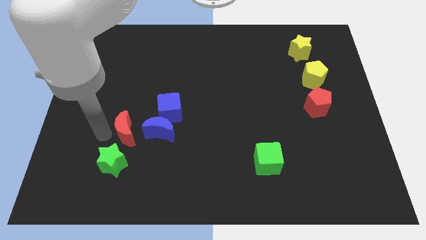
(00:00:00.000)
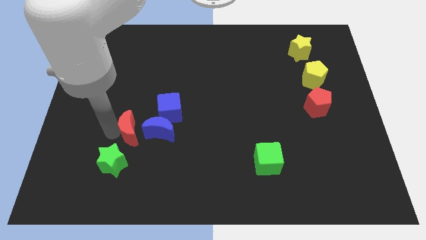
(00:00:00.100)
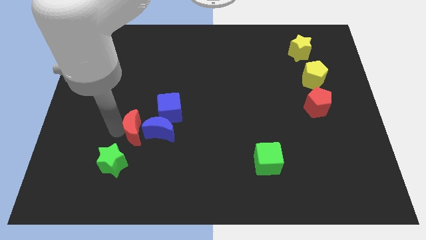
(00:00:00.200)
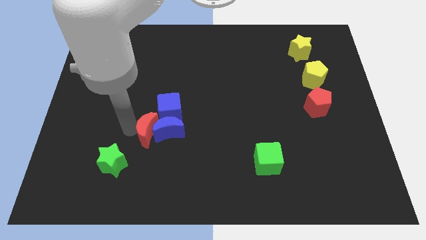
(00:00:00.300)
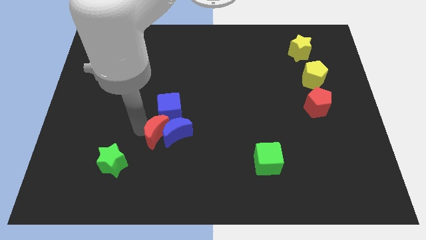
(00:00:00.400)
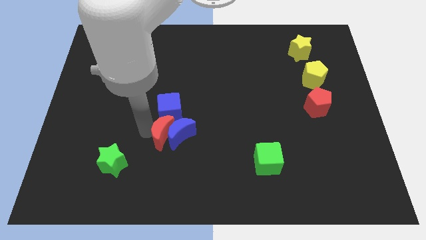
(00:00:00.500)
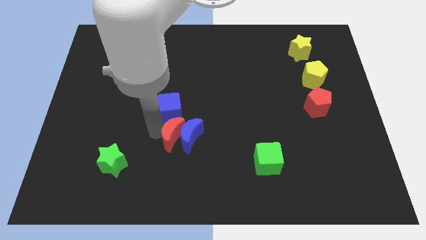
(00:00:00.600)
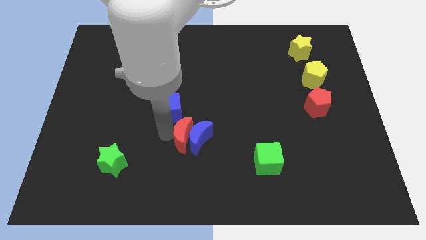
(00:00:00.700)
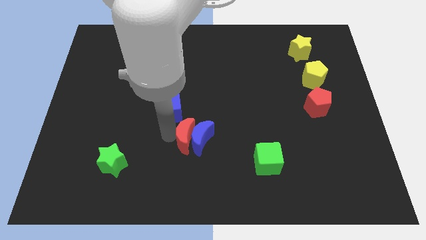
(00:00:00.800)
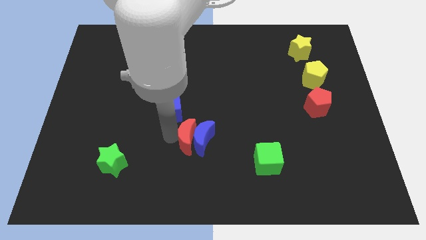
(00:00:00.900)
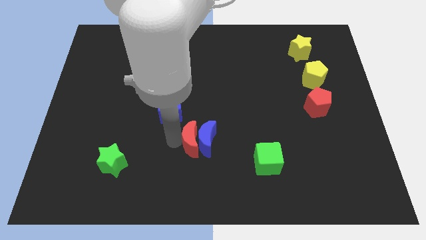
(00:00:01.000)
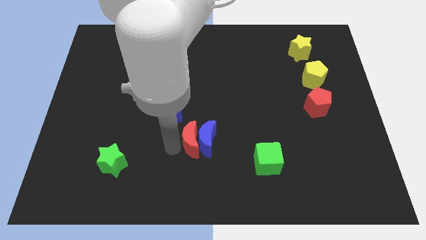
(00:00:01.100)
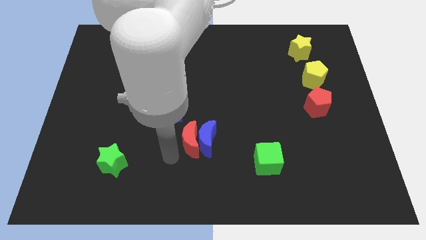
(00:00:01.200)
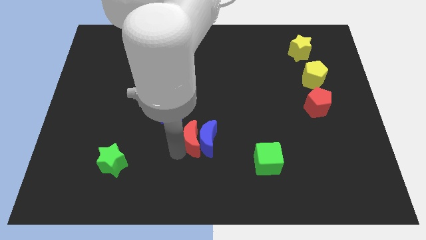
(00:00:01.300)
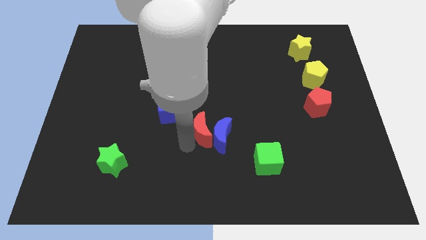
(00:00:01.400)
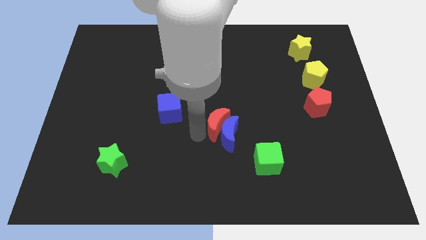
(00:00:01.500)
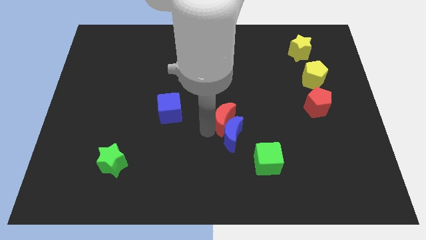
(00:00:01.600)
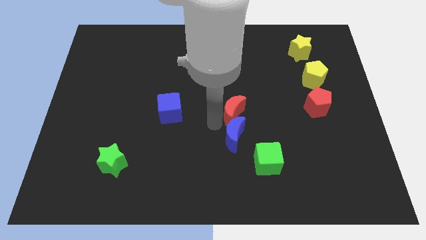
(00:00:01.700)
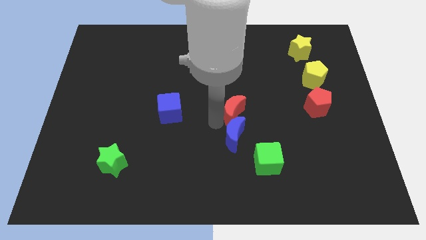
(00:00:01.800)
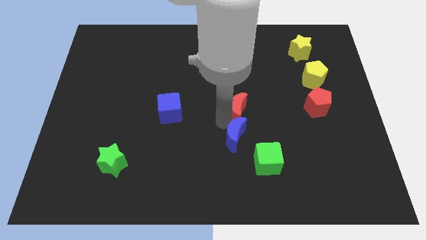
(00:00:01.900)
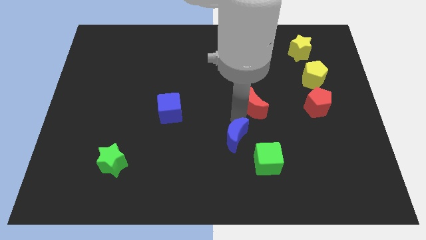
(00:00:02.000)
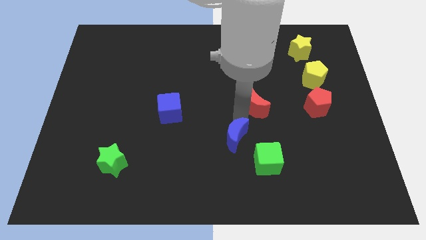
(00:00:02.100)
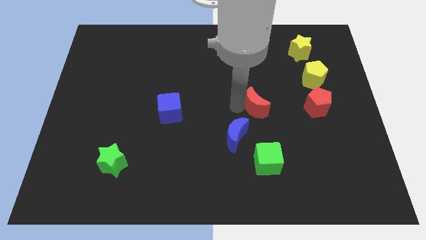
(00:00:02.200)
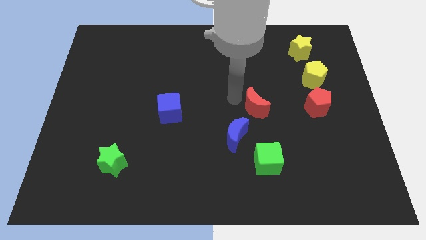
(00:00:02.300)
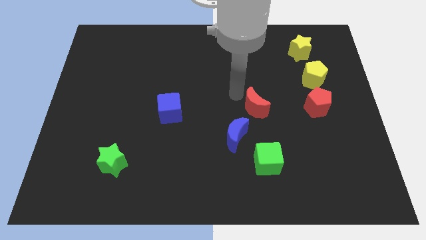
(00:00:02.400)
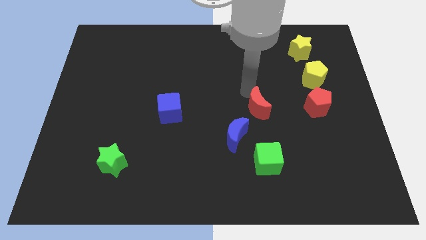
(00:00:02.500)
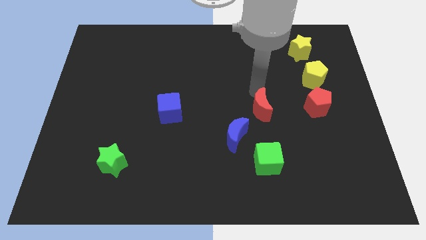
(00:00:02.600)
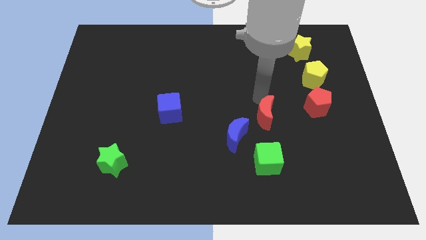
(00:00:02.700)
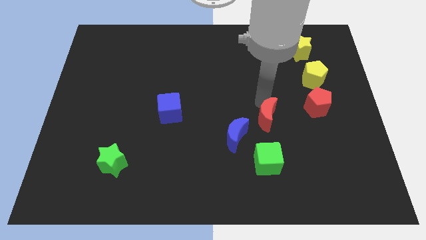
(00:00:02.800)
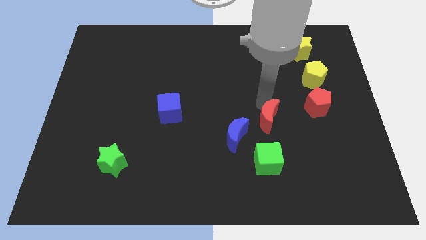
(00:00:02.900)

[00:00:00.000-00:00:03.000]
place the red moon above the green cube

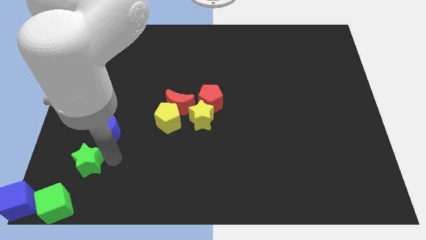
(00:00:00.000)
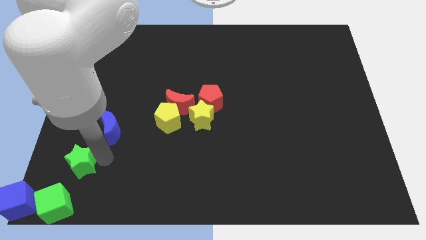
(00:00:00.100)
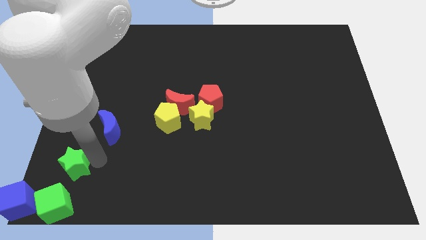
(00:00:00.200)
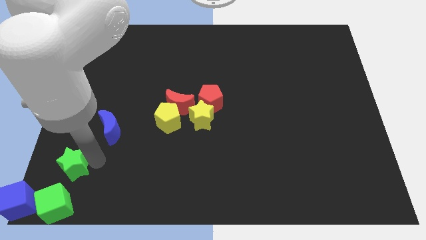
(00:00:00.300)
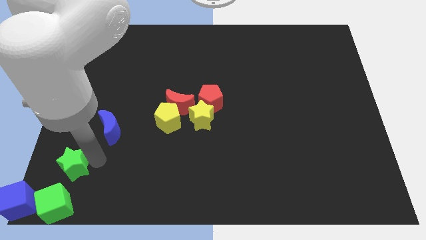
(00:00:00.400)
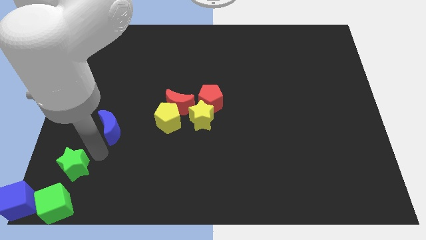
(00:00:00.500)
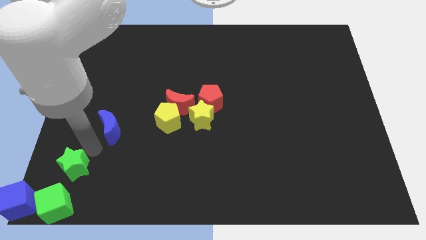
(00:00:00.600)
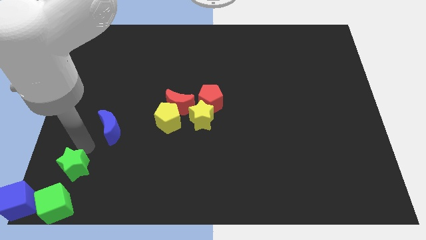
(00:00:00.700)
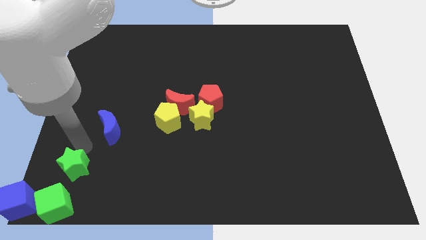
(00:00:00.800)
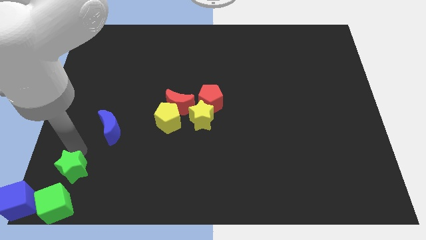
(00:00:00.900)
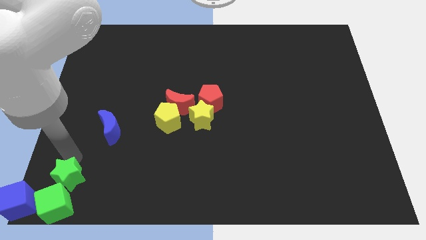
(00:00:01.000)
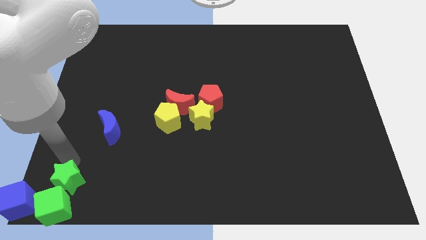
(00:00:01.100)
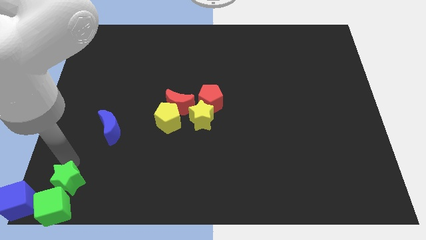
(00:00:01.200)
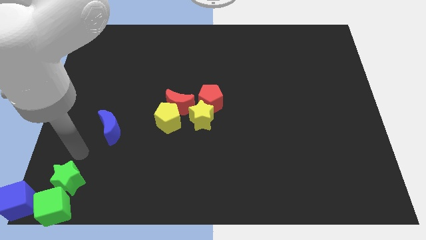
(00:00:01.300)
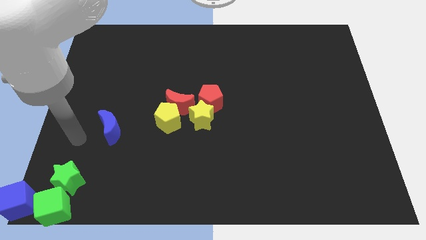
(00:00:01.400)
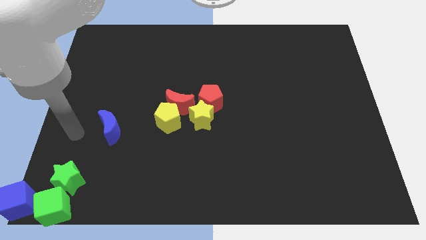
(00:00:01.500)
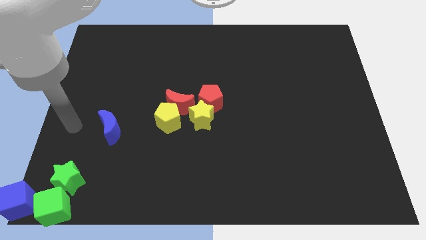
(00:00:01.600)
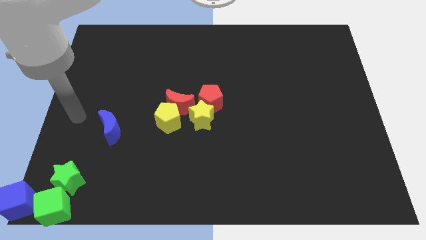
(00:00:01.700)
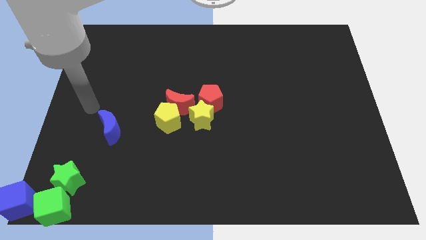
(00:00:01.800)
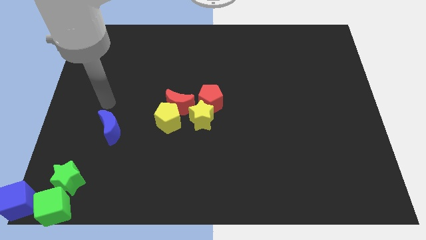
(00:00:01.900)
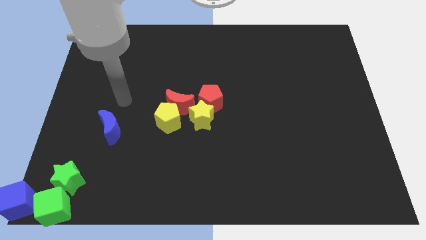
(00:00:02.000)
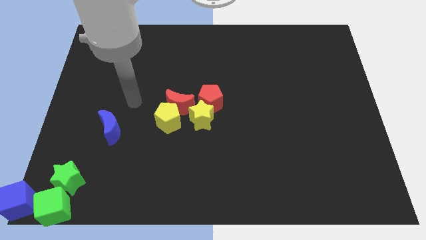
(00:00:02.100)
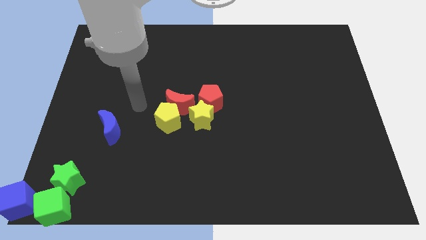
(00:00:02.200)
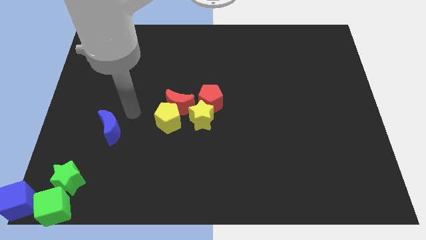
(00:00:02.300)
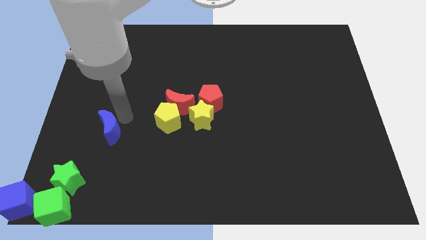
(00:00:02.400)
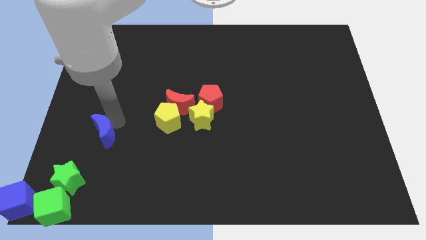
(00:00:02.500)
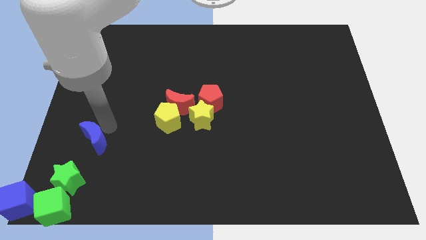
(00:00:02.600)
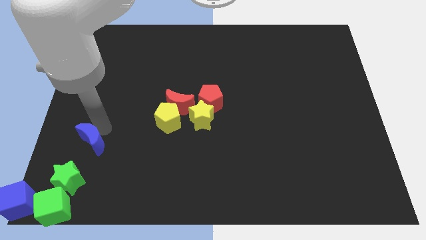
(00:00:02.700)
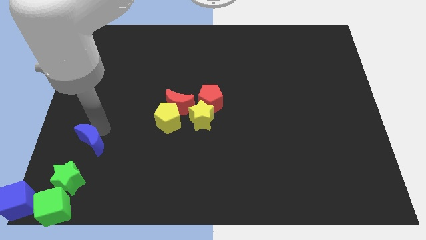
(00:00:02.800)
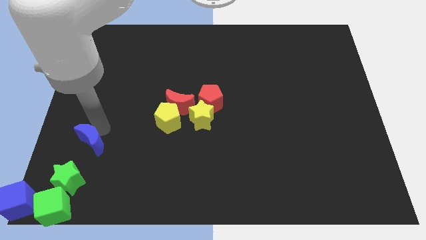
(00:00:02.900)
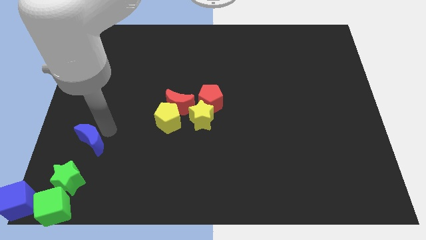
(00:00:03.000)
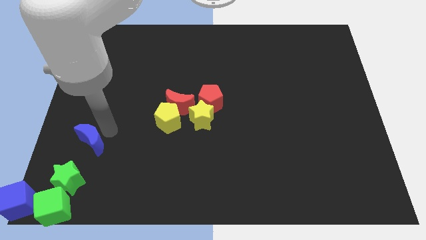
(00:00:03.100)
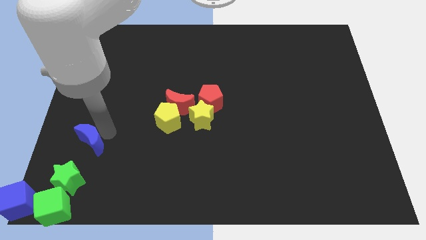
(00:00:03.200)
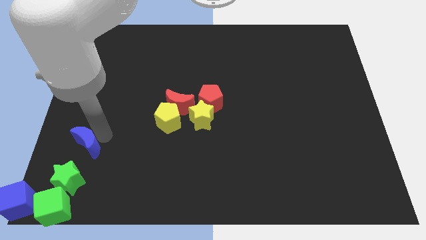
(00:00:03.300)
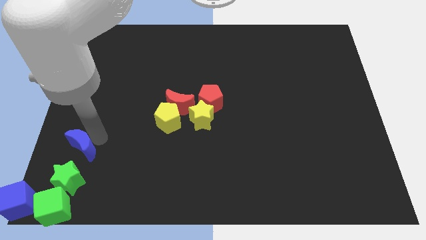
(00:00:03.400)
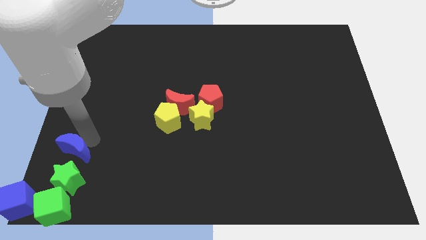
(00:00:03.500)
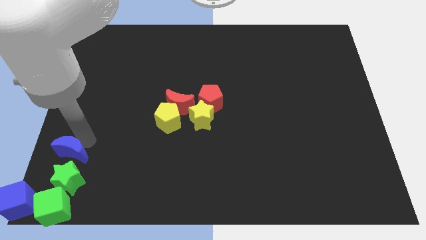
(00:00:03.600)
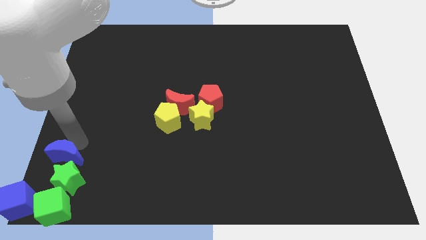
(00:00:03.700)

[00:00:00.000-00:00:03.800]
push the green star towards the green cube

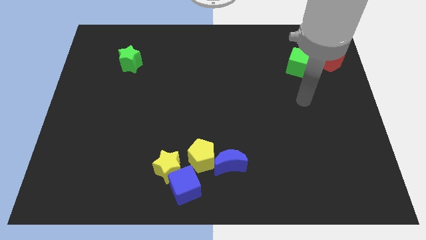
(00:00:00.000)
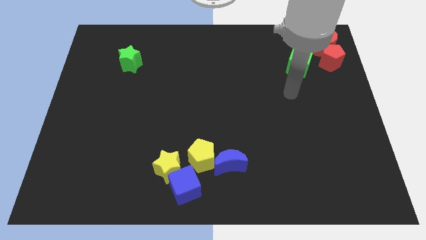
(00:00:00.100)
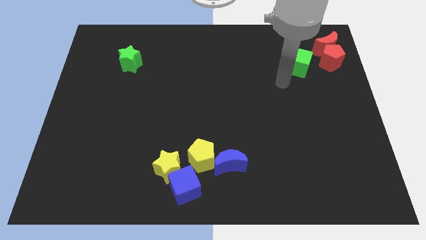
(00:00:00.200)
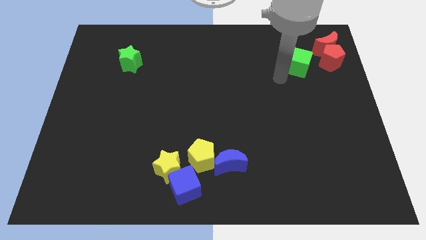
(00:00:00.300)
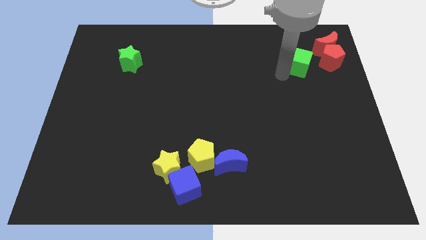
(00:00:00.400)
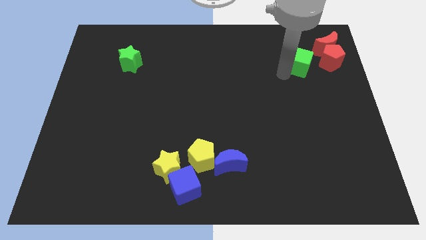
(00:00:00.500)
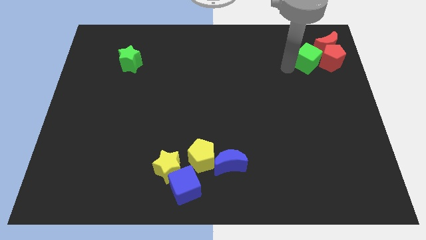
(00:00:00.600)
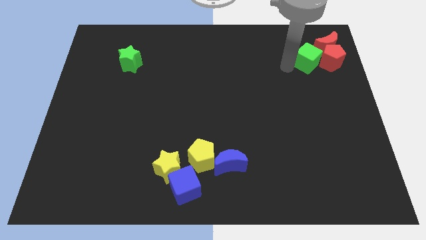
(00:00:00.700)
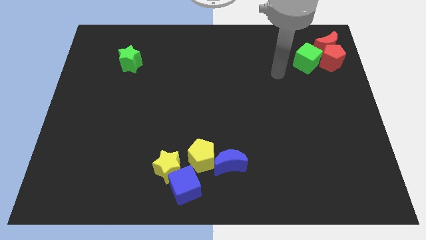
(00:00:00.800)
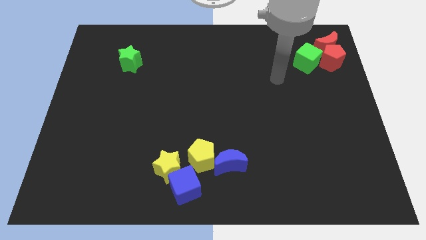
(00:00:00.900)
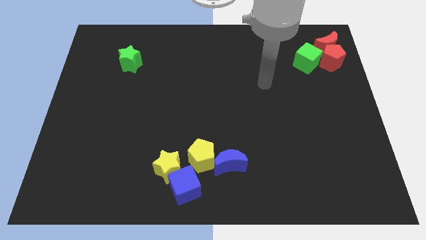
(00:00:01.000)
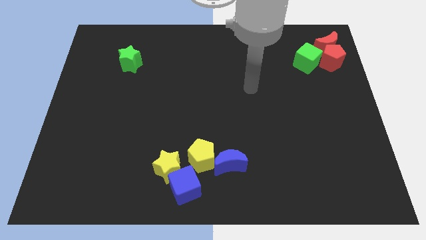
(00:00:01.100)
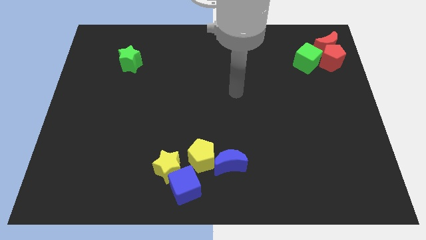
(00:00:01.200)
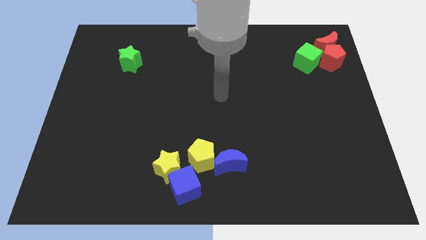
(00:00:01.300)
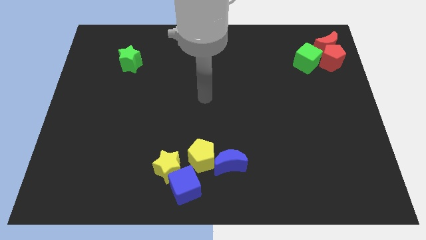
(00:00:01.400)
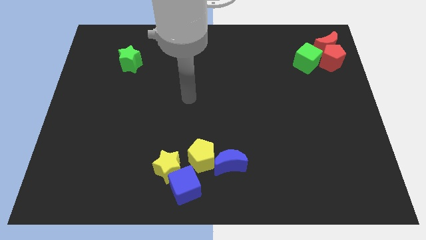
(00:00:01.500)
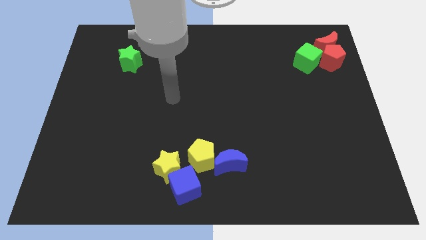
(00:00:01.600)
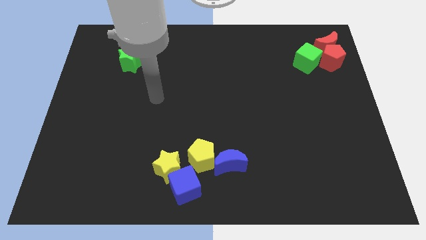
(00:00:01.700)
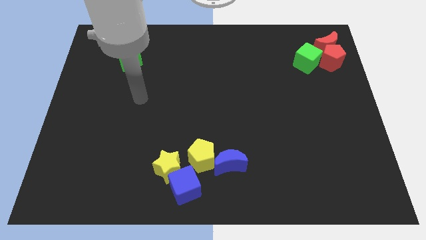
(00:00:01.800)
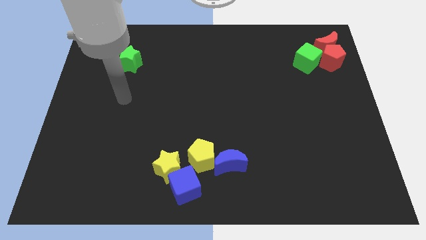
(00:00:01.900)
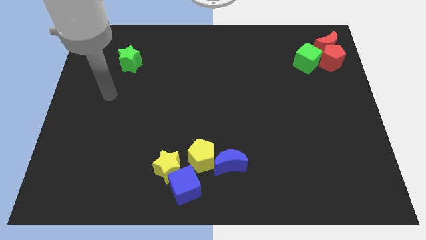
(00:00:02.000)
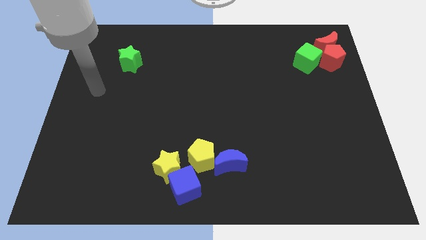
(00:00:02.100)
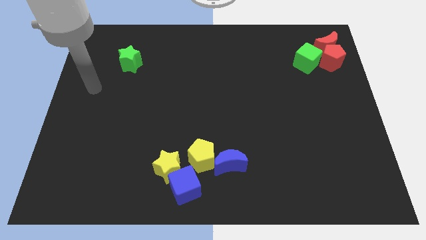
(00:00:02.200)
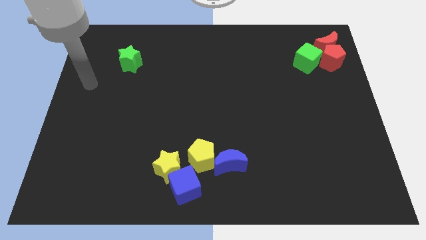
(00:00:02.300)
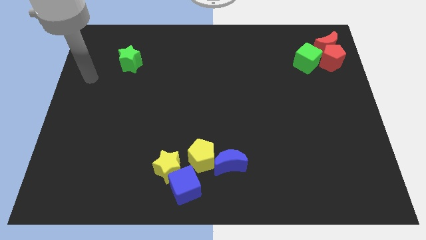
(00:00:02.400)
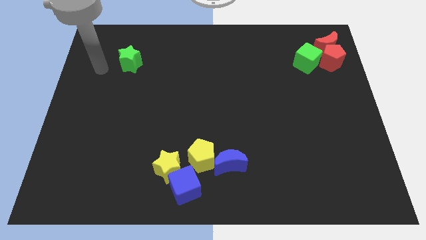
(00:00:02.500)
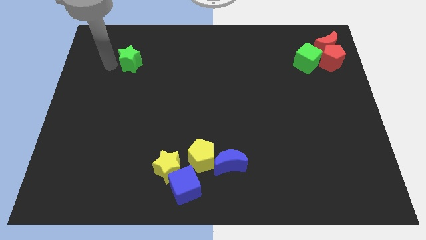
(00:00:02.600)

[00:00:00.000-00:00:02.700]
go away from the group of blocks
